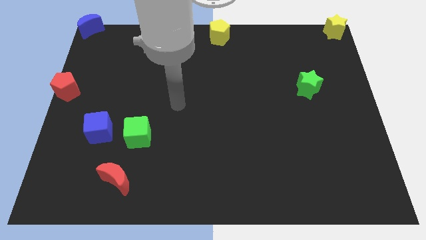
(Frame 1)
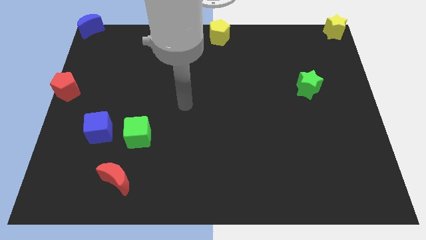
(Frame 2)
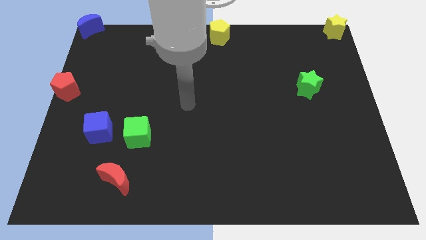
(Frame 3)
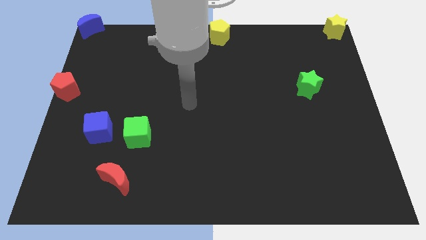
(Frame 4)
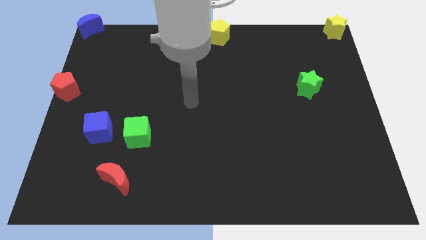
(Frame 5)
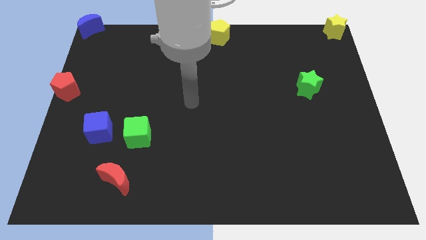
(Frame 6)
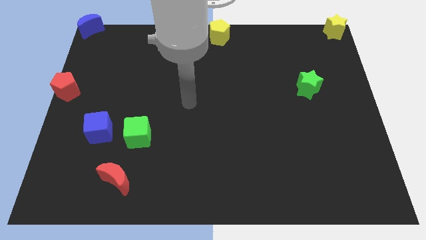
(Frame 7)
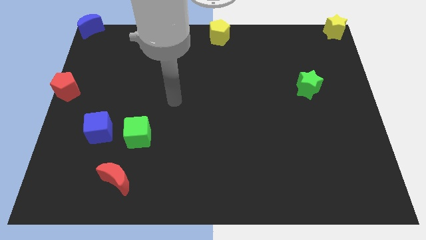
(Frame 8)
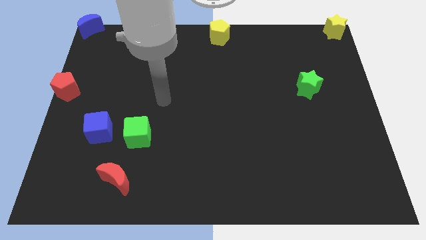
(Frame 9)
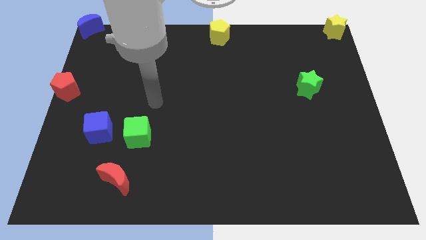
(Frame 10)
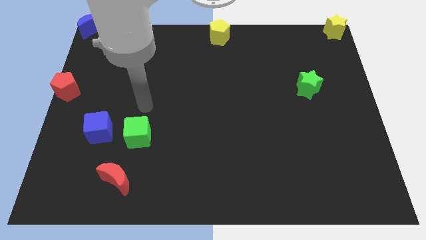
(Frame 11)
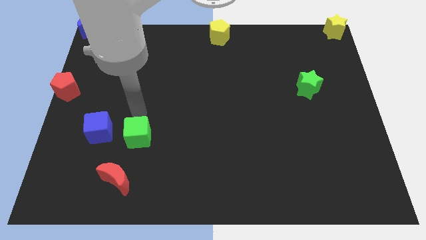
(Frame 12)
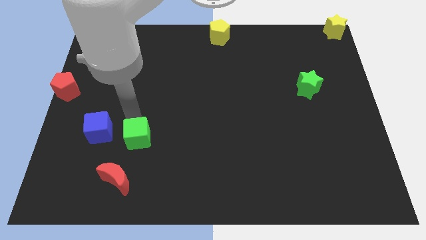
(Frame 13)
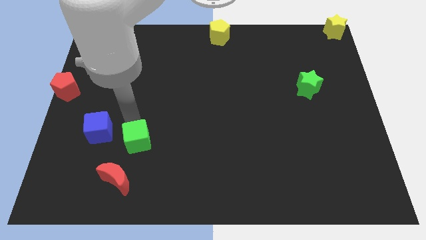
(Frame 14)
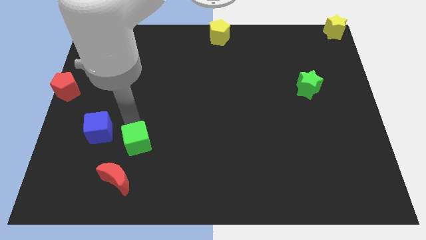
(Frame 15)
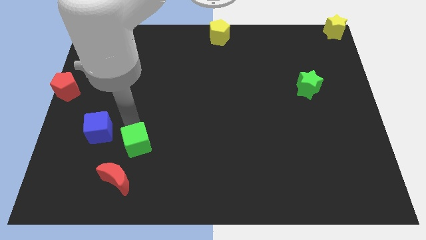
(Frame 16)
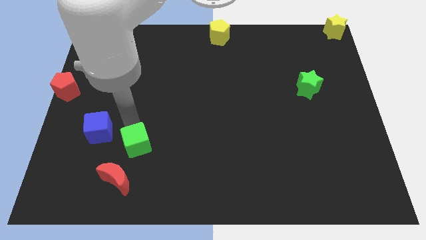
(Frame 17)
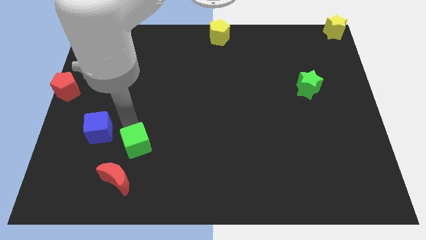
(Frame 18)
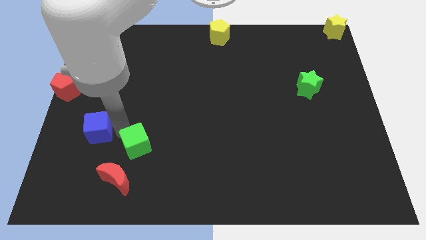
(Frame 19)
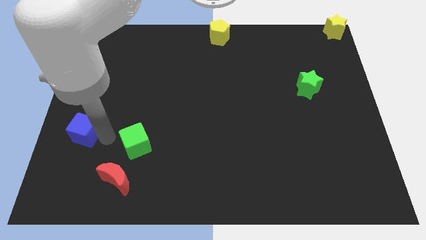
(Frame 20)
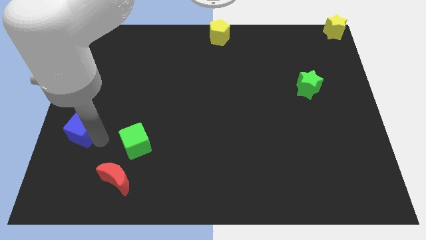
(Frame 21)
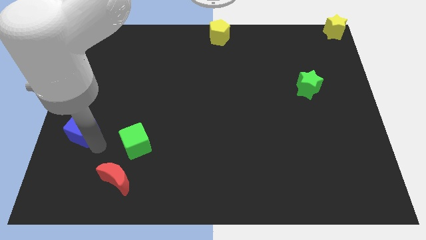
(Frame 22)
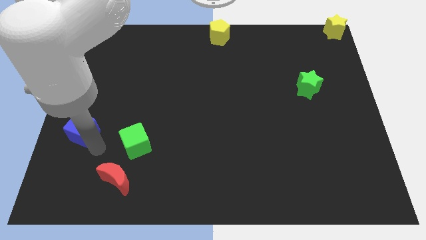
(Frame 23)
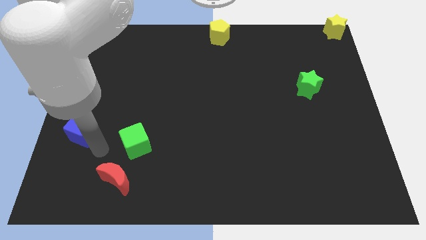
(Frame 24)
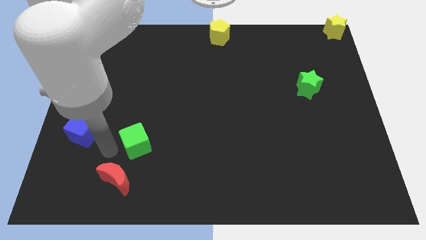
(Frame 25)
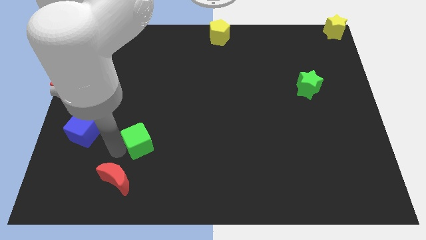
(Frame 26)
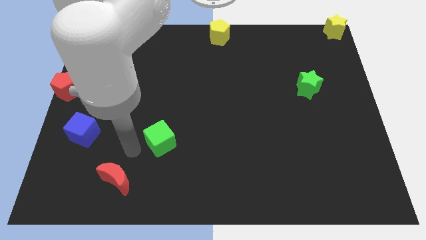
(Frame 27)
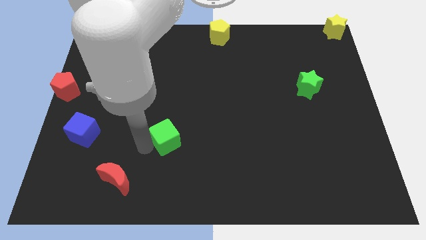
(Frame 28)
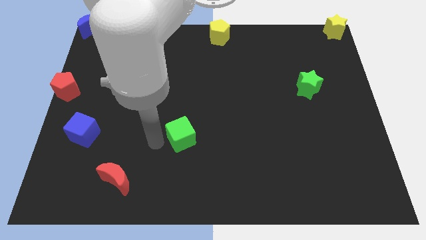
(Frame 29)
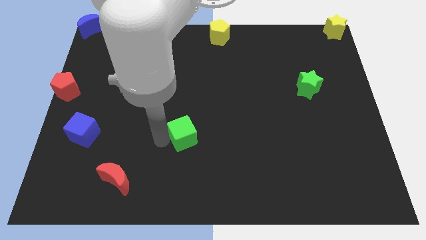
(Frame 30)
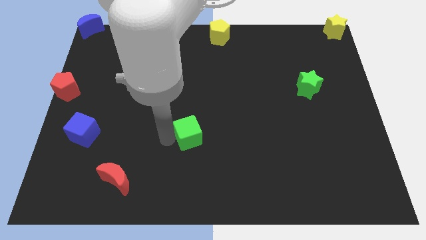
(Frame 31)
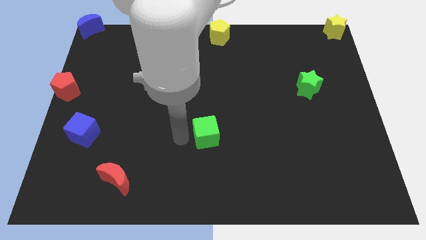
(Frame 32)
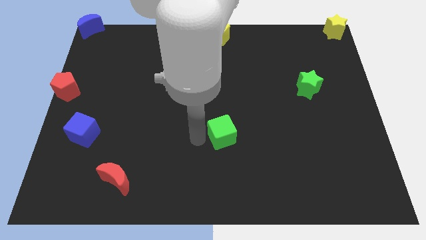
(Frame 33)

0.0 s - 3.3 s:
push green cube below yellow pentagon

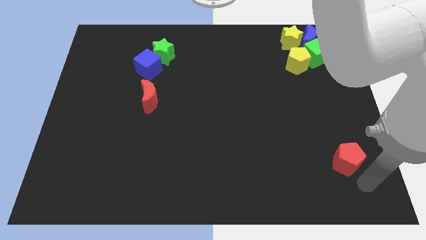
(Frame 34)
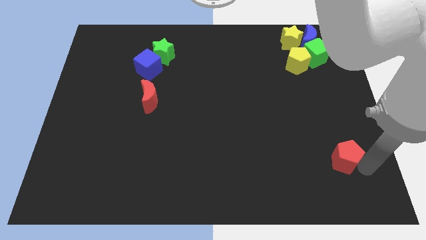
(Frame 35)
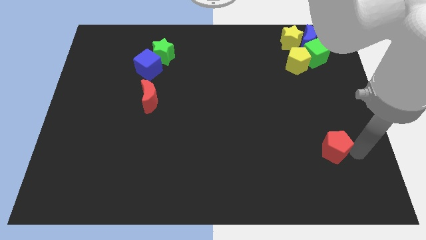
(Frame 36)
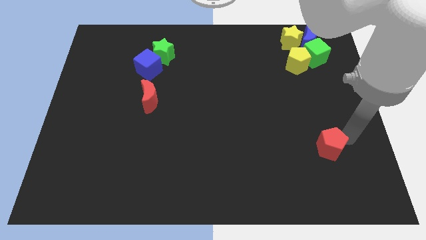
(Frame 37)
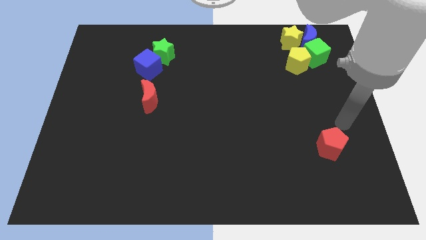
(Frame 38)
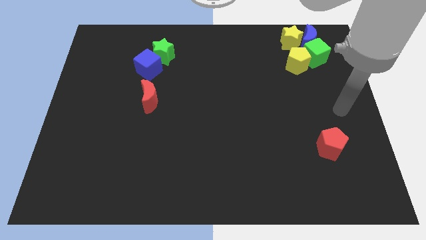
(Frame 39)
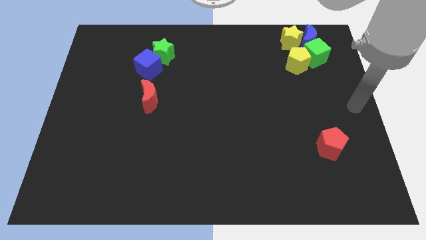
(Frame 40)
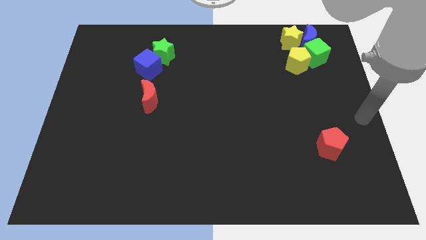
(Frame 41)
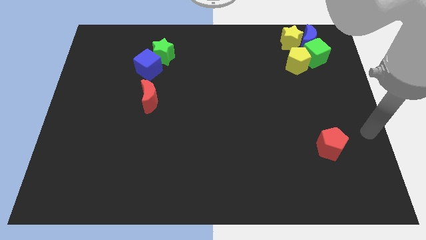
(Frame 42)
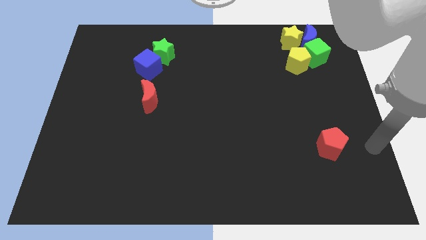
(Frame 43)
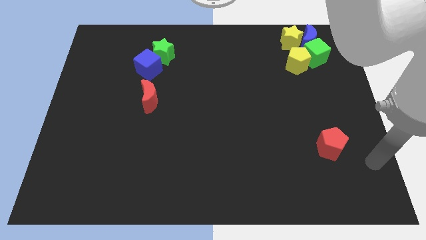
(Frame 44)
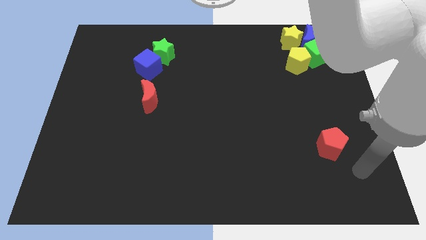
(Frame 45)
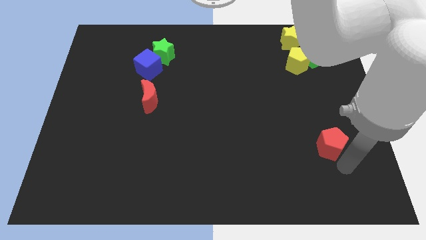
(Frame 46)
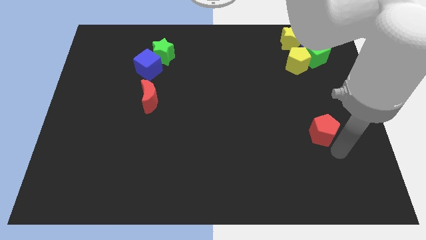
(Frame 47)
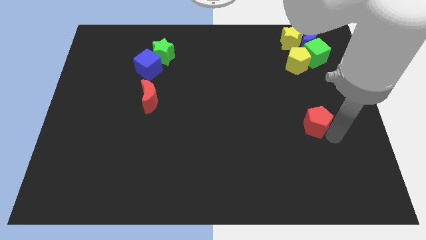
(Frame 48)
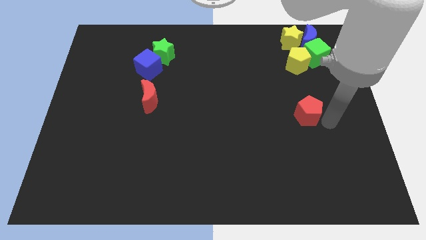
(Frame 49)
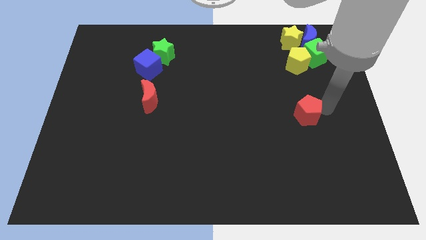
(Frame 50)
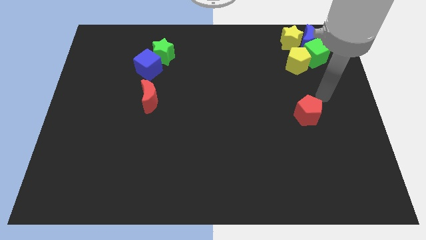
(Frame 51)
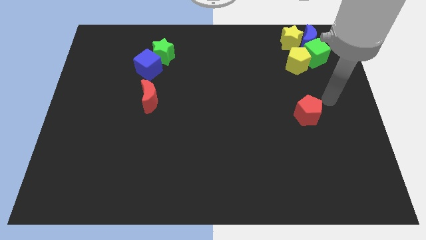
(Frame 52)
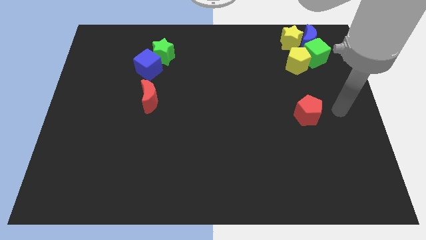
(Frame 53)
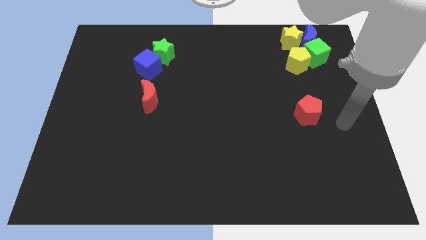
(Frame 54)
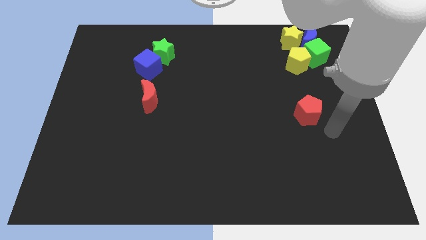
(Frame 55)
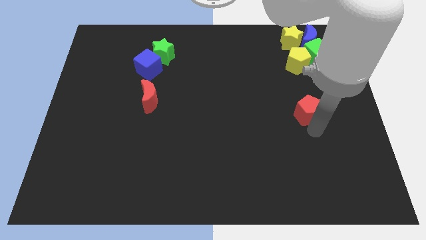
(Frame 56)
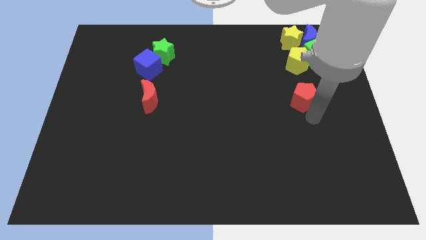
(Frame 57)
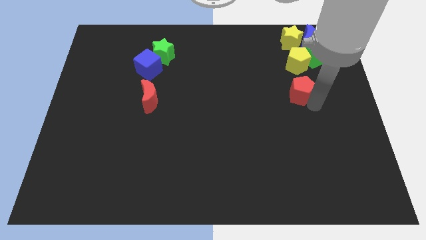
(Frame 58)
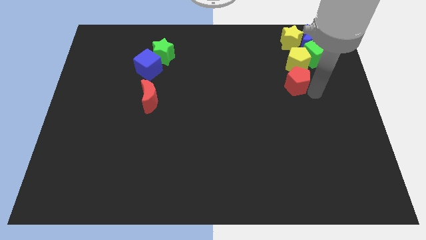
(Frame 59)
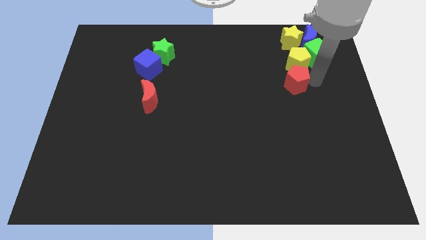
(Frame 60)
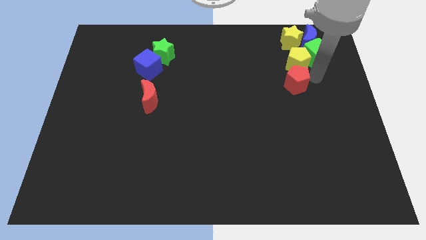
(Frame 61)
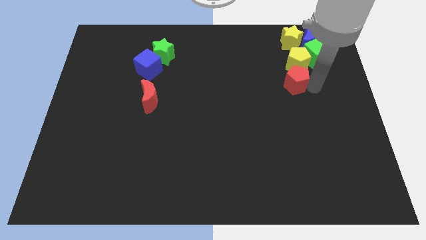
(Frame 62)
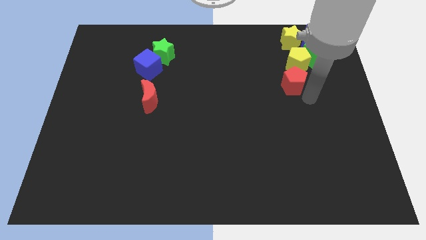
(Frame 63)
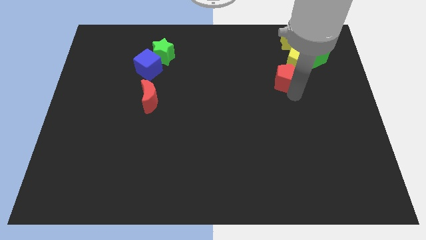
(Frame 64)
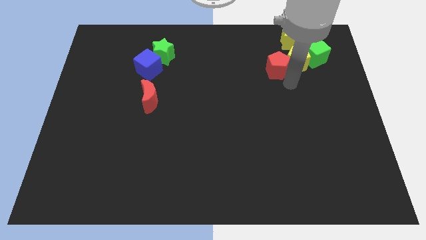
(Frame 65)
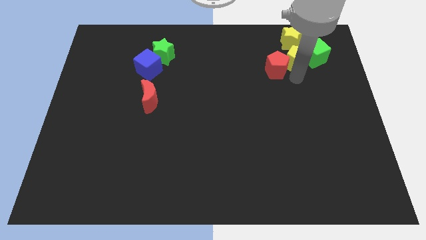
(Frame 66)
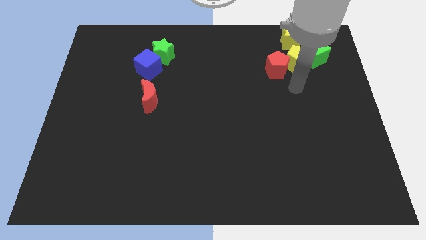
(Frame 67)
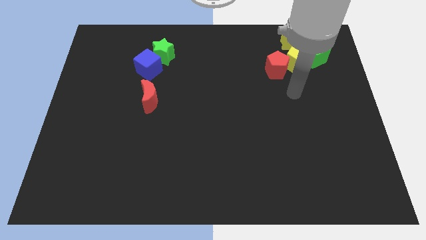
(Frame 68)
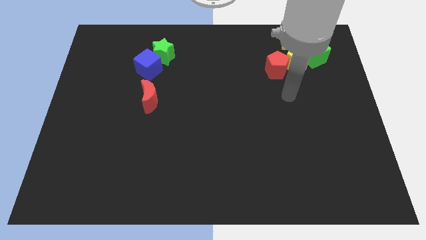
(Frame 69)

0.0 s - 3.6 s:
move the red pentagon to the left side of the yellow penatgon

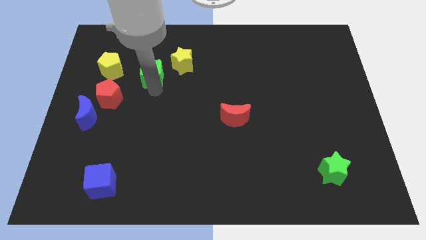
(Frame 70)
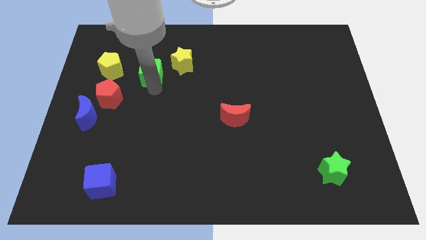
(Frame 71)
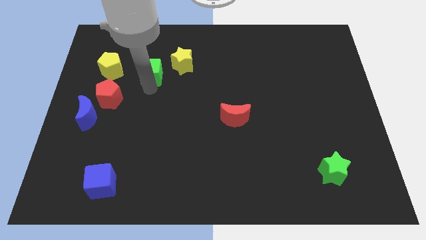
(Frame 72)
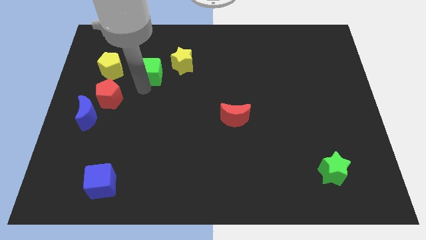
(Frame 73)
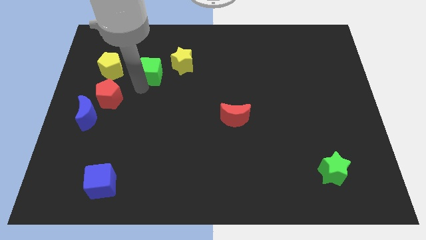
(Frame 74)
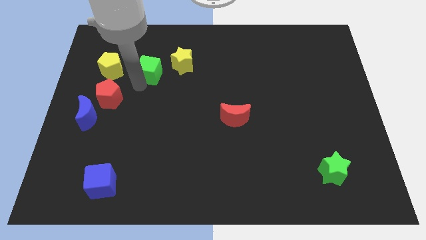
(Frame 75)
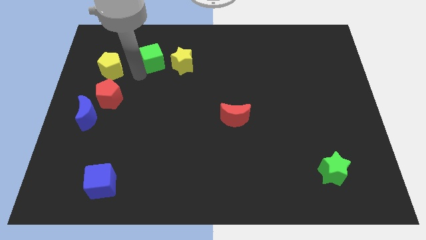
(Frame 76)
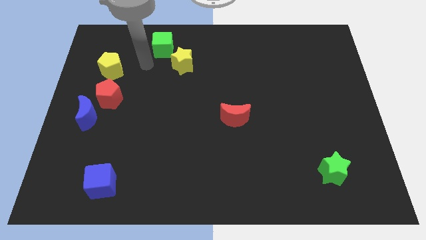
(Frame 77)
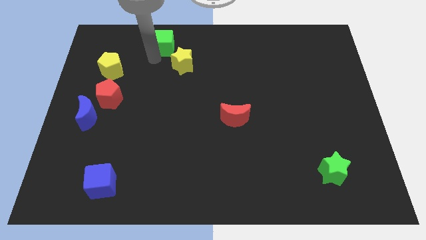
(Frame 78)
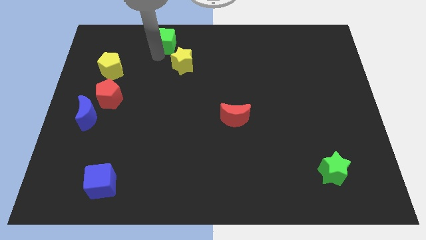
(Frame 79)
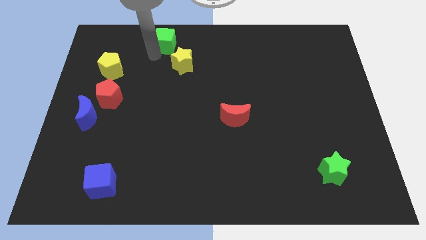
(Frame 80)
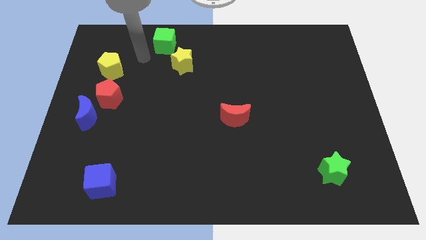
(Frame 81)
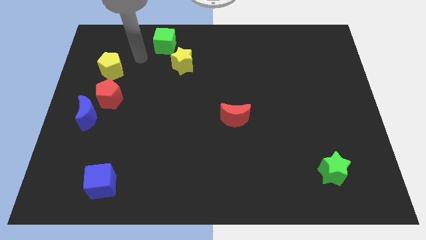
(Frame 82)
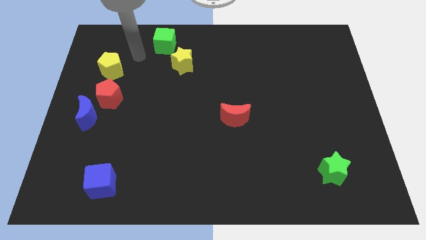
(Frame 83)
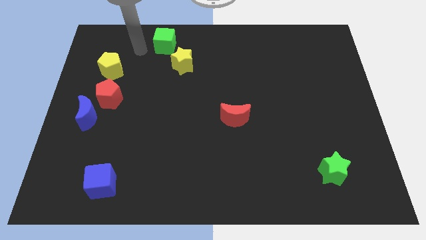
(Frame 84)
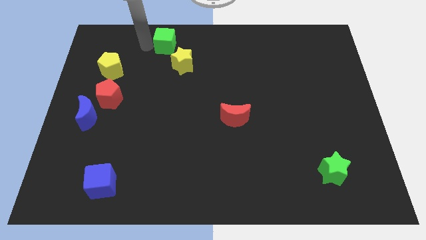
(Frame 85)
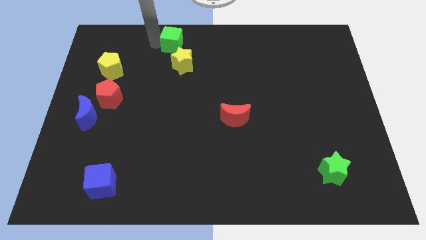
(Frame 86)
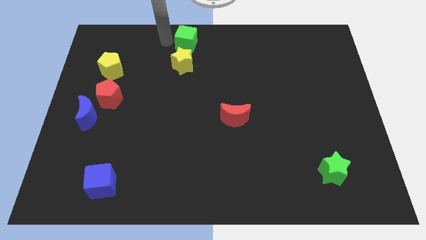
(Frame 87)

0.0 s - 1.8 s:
place the green cube above the yellow star

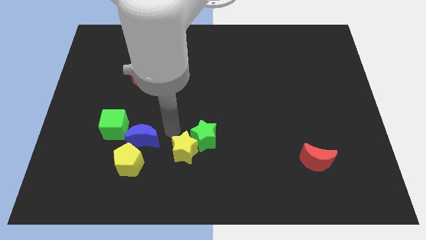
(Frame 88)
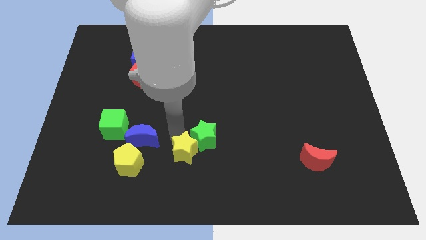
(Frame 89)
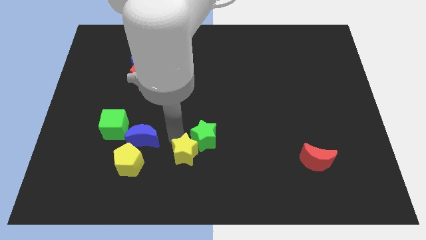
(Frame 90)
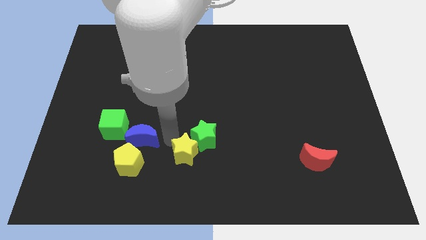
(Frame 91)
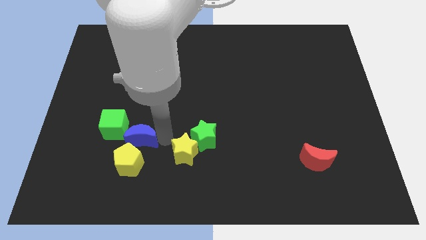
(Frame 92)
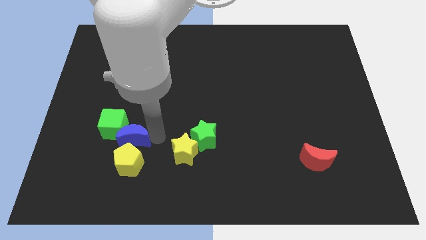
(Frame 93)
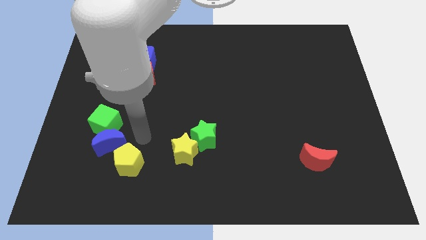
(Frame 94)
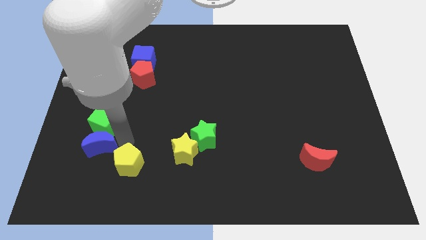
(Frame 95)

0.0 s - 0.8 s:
move blue crescent diagonally in between green cube and yellow pentagon
